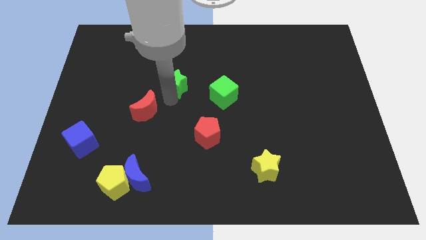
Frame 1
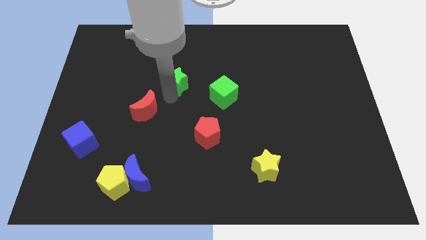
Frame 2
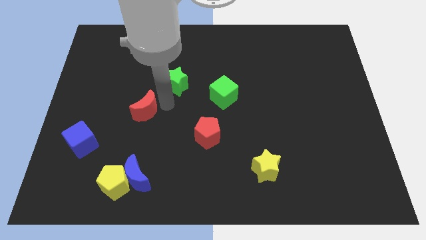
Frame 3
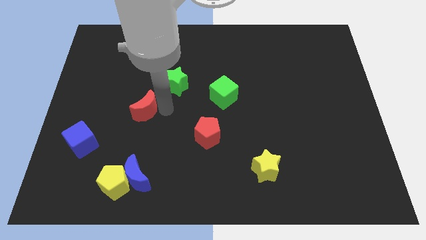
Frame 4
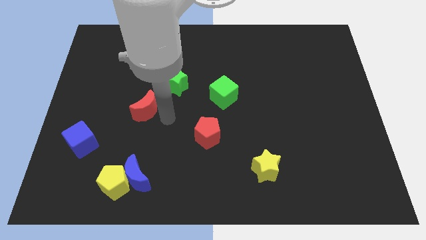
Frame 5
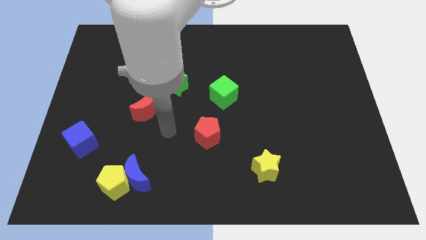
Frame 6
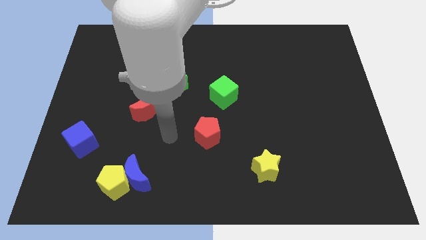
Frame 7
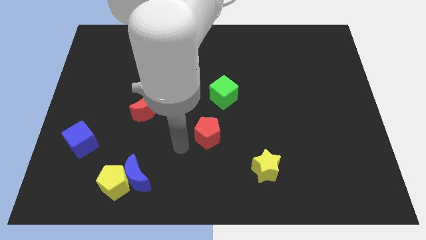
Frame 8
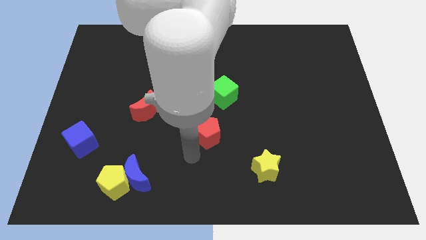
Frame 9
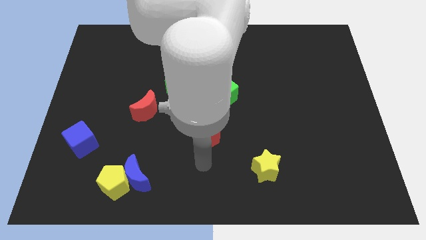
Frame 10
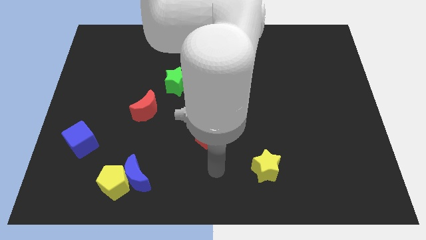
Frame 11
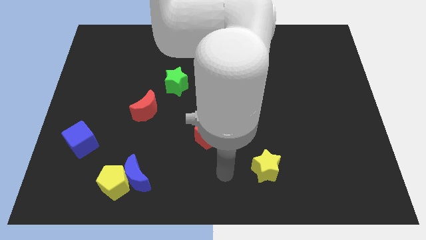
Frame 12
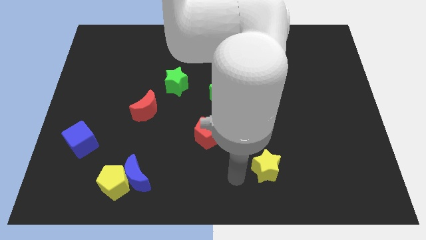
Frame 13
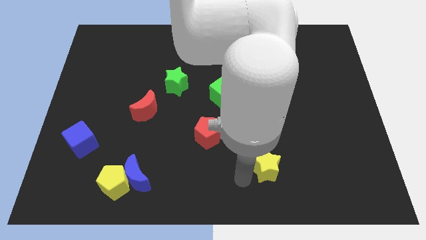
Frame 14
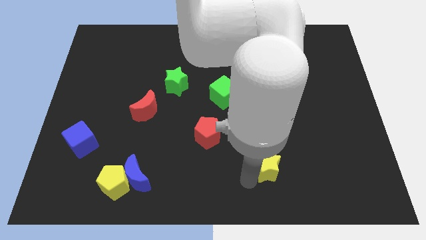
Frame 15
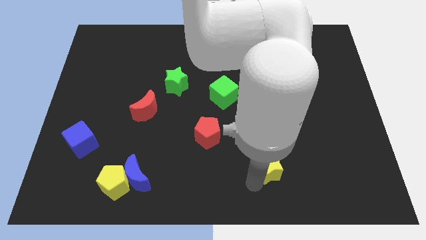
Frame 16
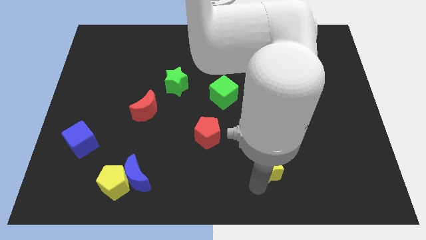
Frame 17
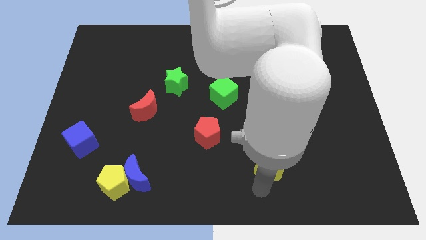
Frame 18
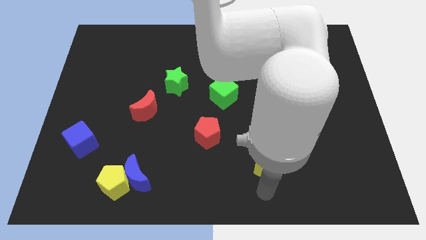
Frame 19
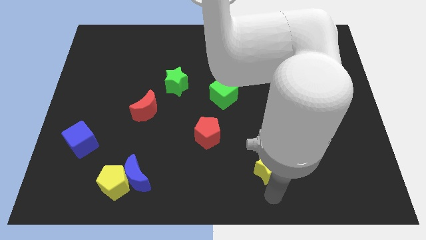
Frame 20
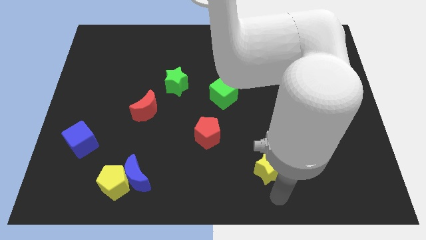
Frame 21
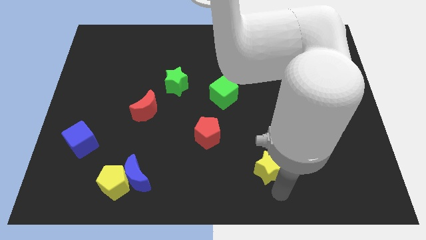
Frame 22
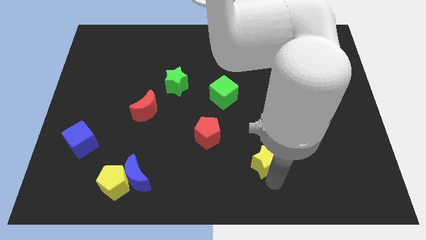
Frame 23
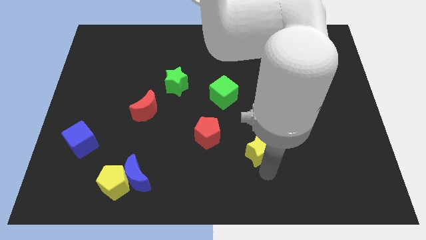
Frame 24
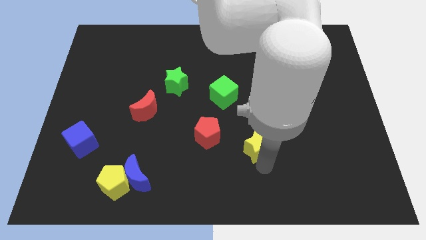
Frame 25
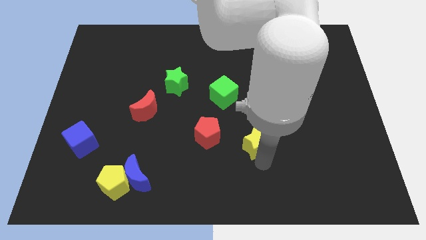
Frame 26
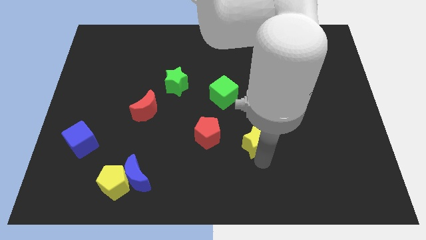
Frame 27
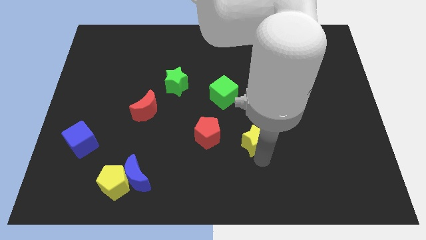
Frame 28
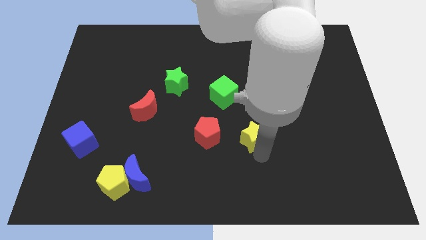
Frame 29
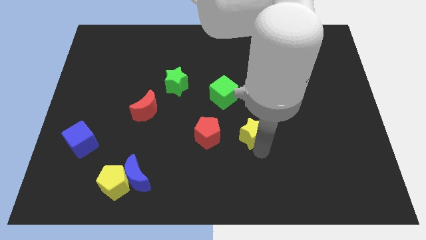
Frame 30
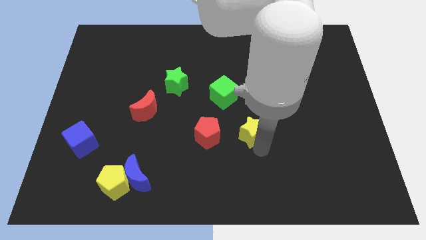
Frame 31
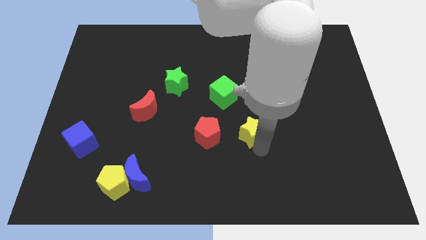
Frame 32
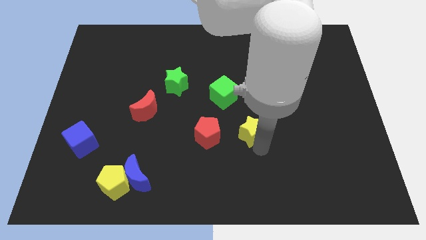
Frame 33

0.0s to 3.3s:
push the yellow star to the right of the red pentagon

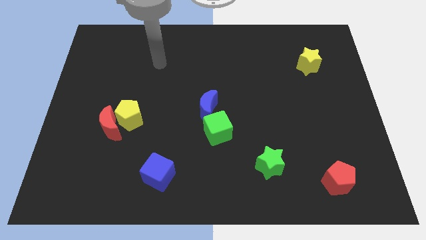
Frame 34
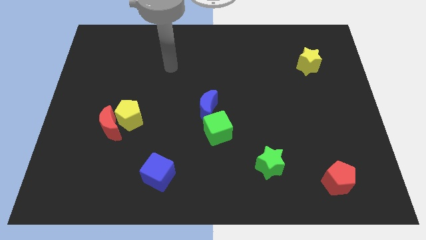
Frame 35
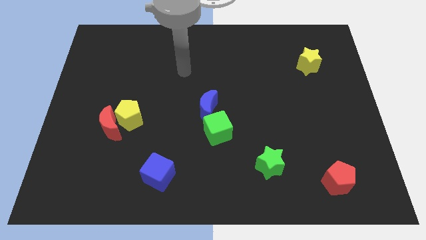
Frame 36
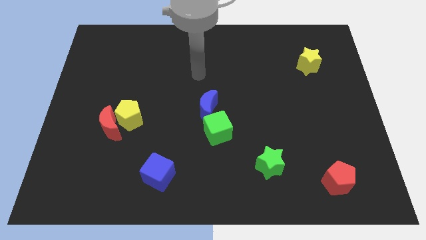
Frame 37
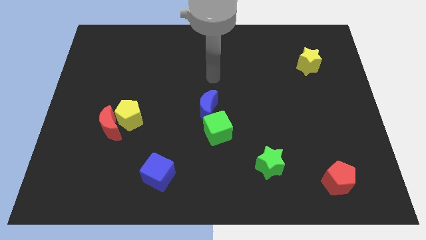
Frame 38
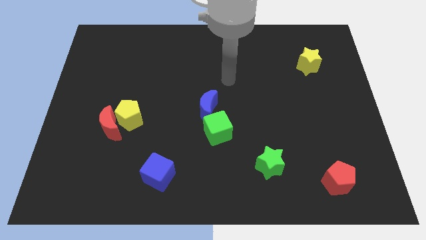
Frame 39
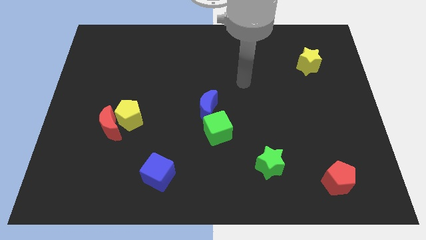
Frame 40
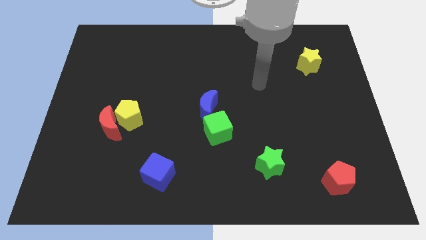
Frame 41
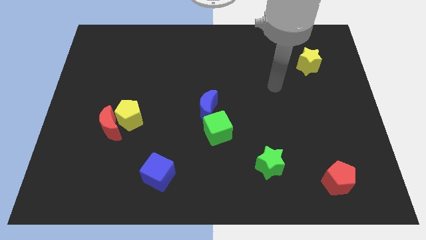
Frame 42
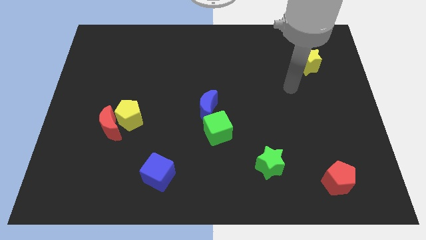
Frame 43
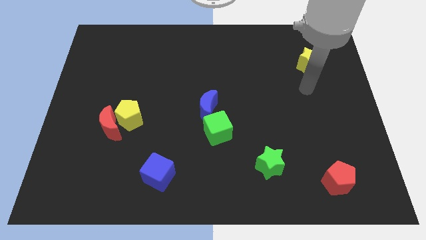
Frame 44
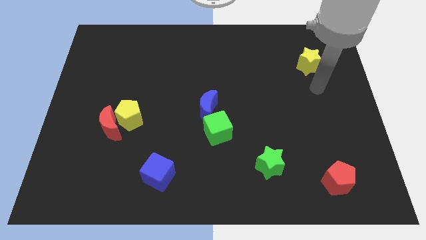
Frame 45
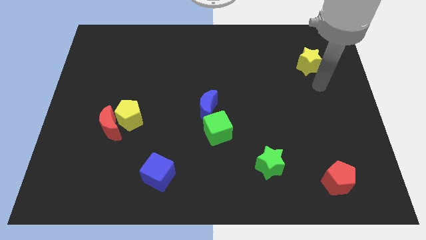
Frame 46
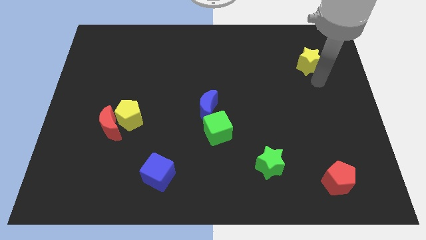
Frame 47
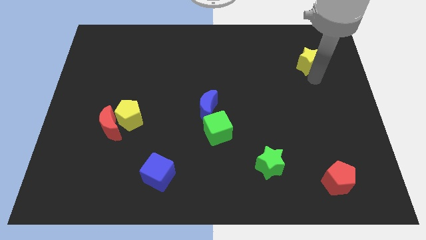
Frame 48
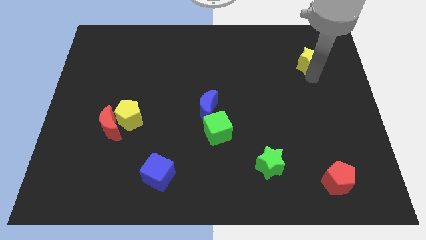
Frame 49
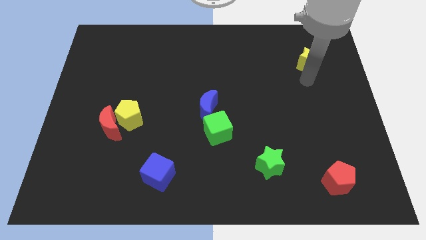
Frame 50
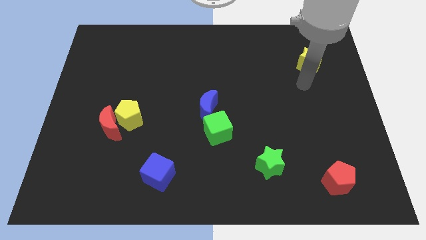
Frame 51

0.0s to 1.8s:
move your hand towards the bottom of the yellow star

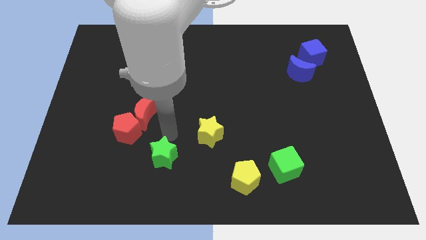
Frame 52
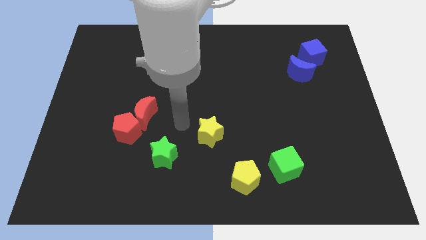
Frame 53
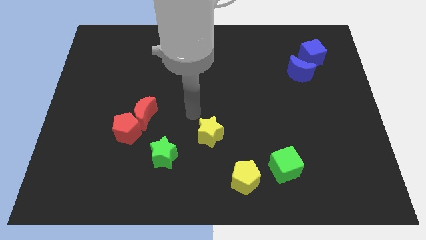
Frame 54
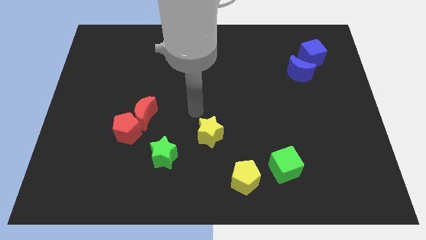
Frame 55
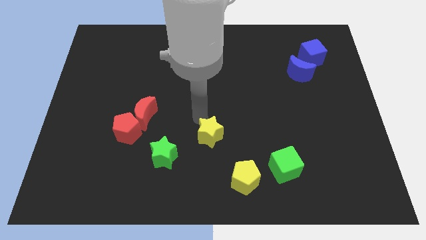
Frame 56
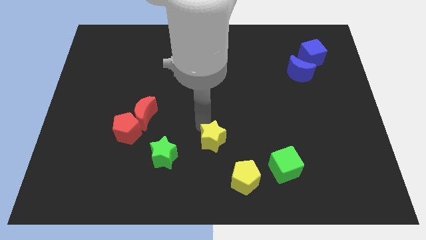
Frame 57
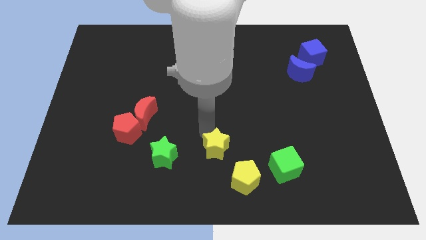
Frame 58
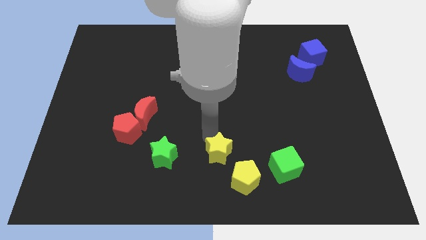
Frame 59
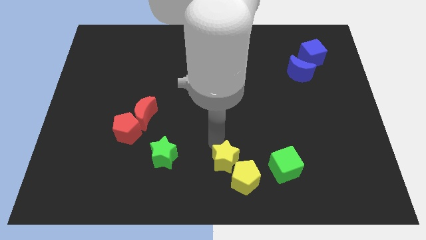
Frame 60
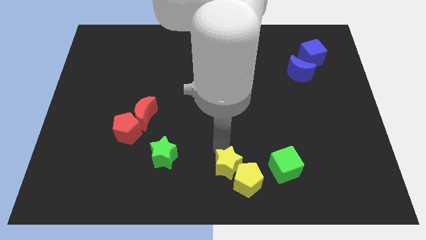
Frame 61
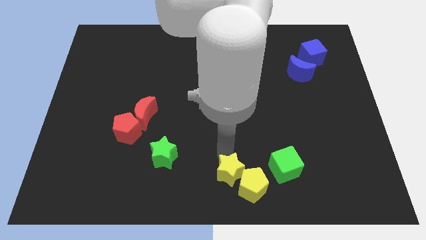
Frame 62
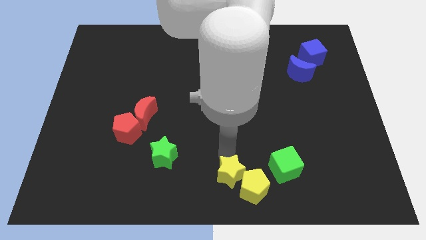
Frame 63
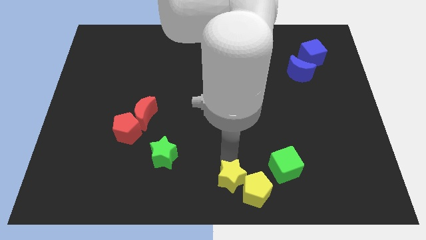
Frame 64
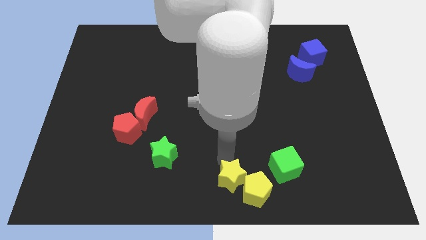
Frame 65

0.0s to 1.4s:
move the yellow star into the yellow pentagon

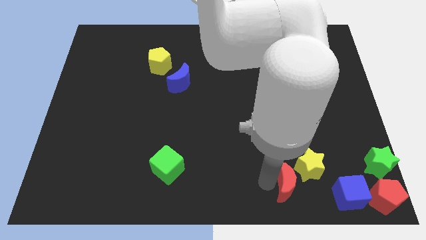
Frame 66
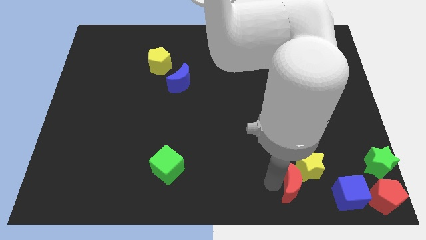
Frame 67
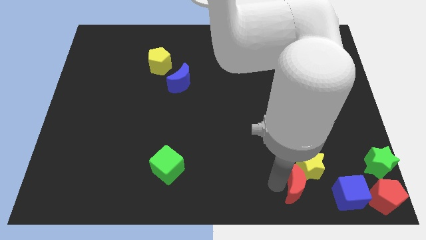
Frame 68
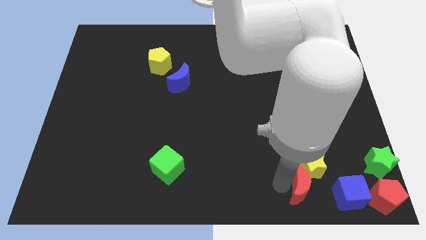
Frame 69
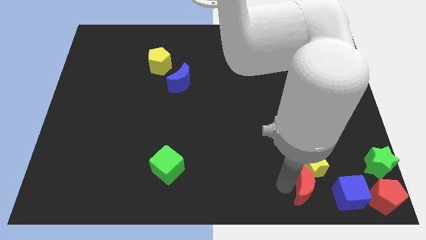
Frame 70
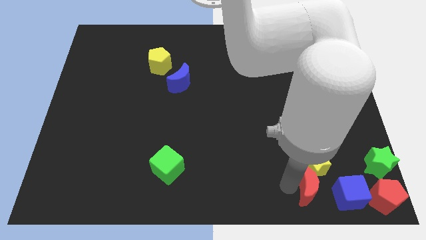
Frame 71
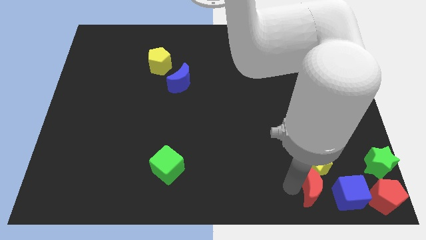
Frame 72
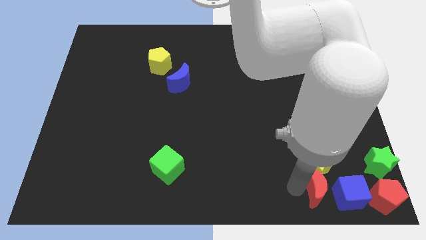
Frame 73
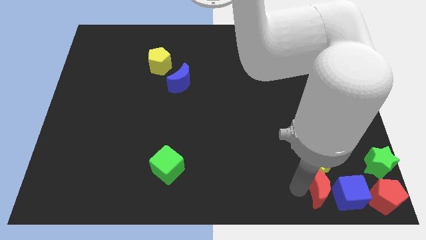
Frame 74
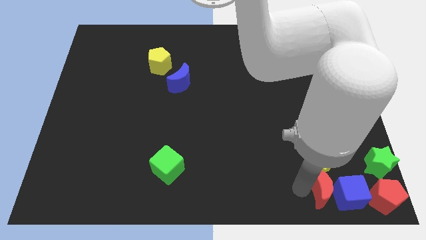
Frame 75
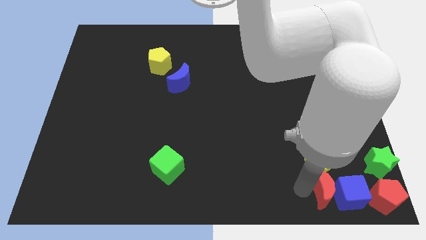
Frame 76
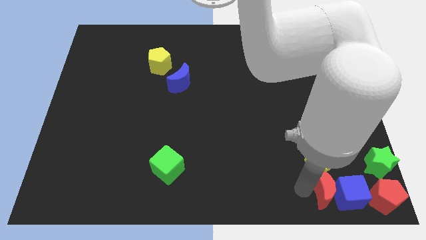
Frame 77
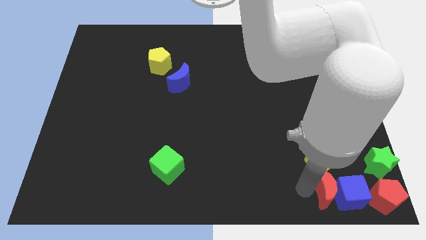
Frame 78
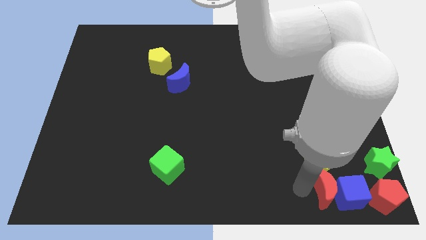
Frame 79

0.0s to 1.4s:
move the red moon down to the yellow star

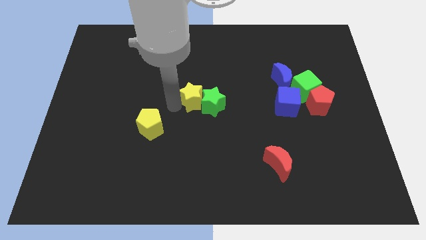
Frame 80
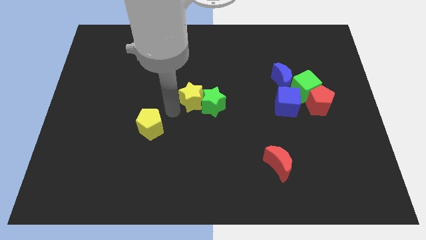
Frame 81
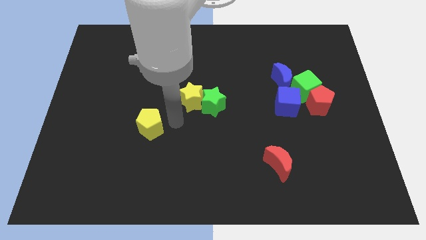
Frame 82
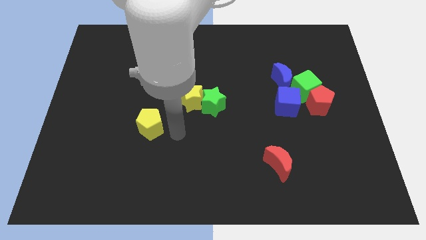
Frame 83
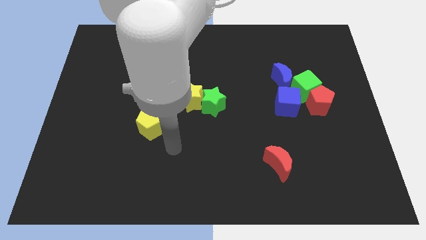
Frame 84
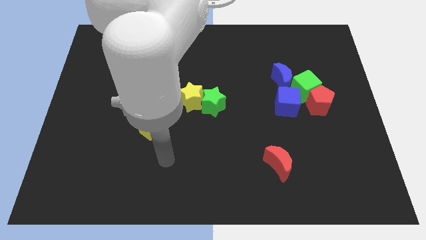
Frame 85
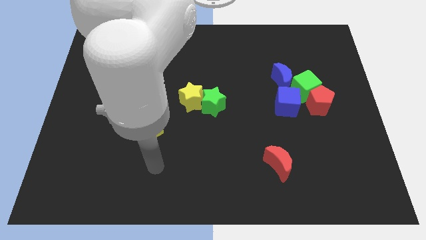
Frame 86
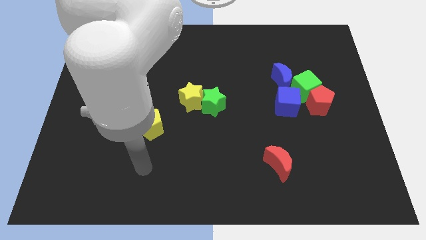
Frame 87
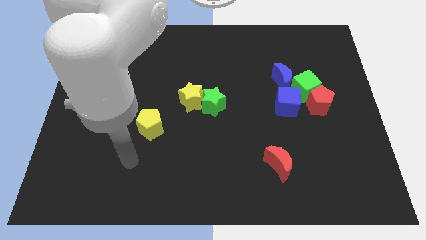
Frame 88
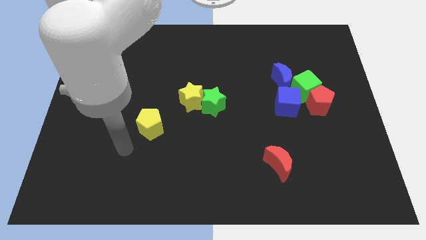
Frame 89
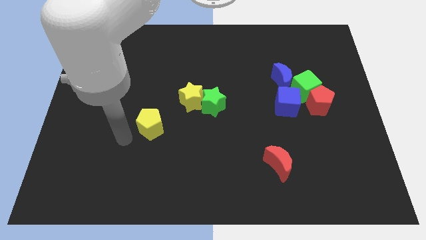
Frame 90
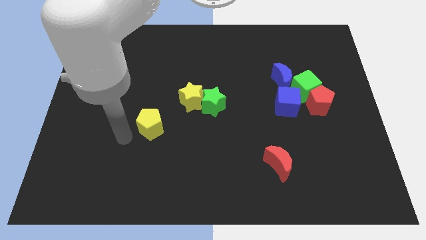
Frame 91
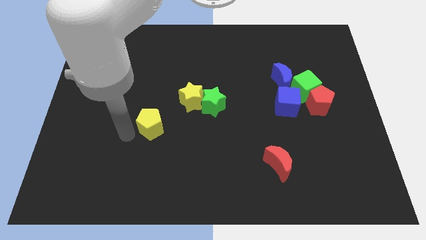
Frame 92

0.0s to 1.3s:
move your arm to the left of the yellow pentagon
